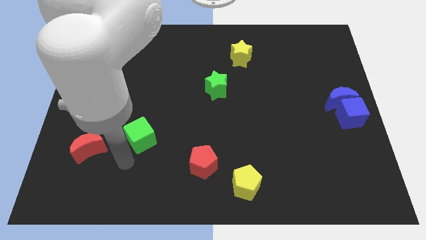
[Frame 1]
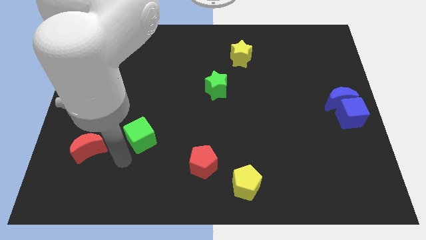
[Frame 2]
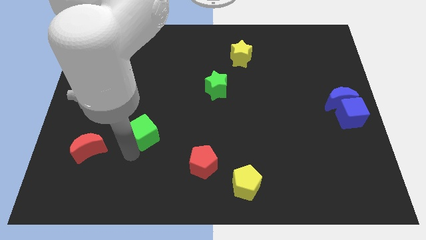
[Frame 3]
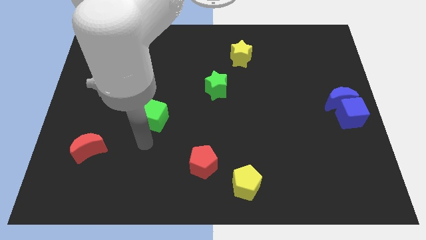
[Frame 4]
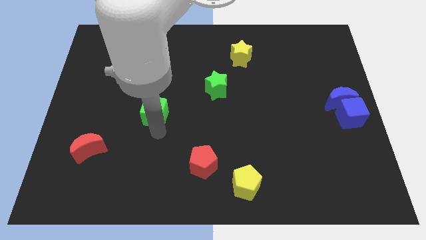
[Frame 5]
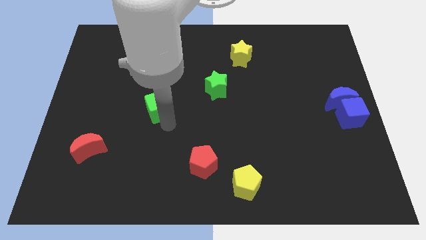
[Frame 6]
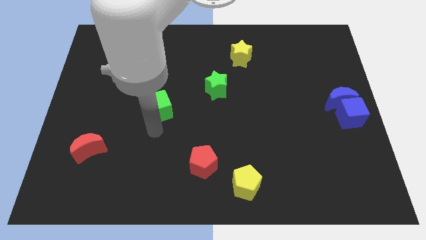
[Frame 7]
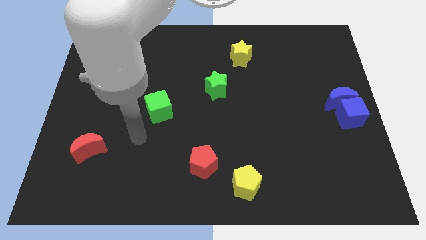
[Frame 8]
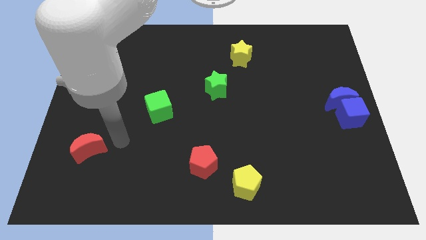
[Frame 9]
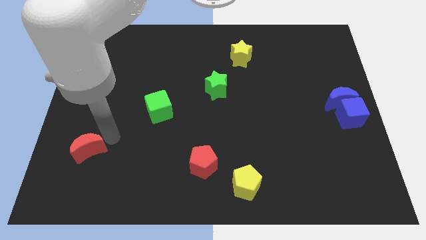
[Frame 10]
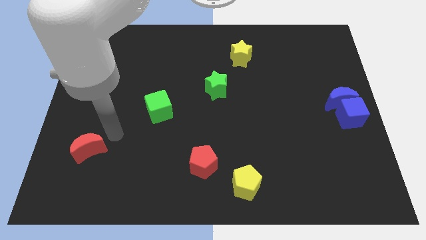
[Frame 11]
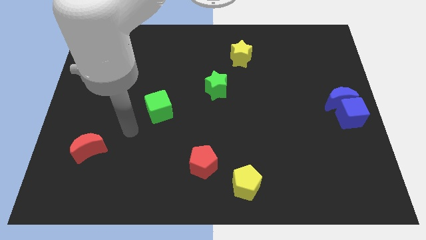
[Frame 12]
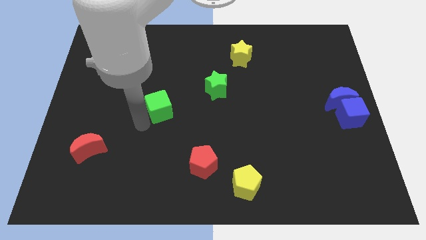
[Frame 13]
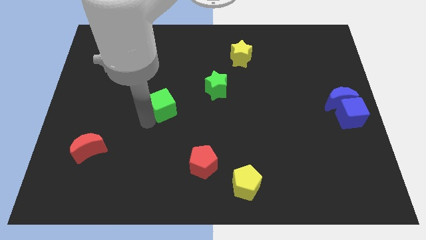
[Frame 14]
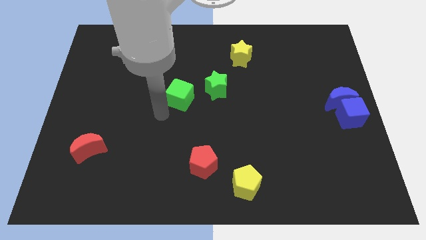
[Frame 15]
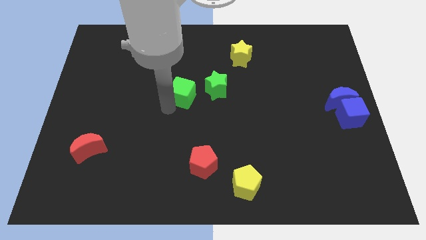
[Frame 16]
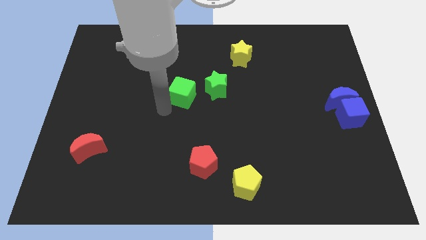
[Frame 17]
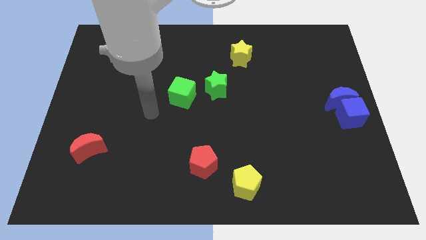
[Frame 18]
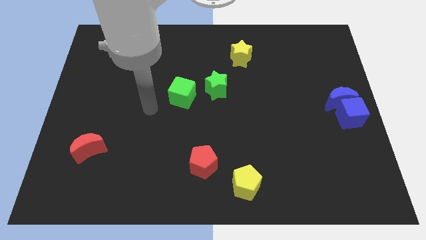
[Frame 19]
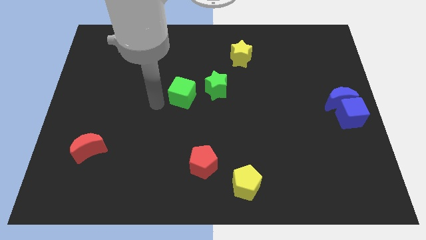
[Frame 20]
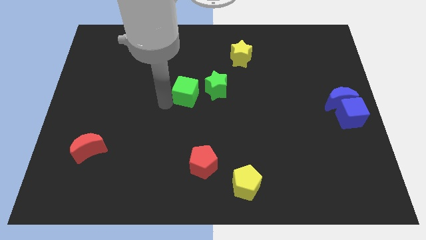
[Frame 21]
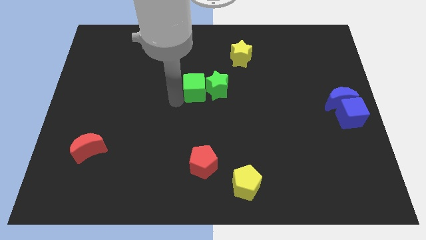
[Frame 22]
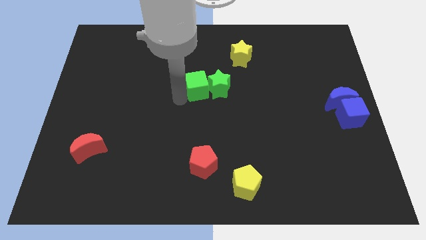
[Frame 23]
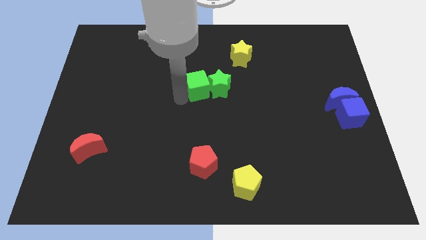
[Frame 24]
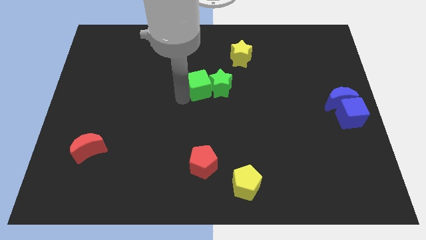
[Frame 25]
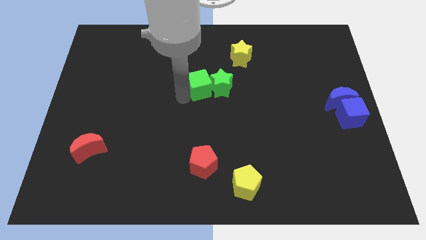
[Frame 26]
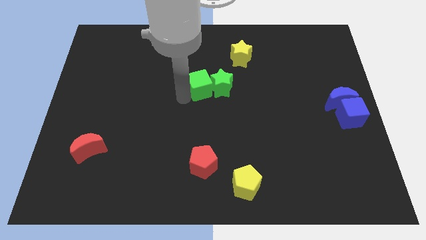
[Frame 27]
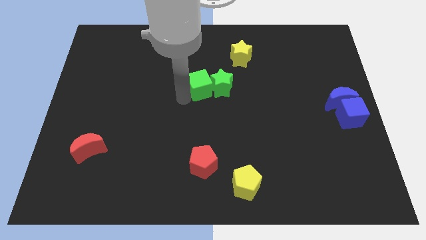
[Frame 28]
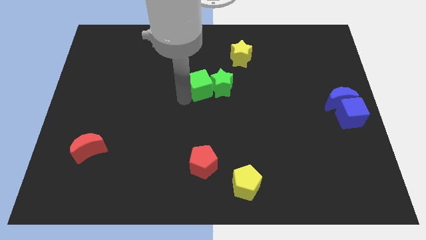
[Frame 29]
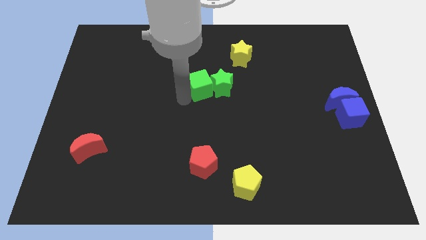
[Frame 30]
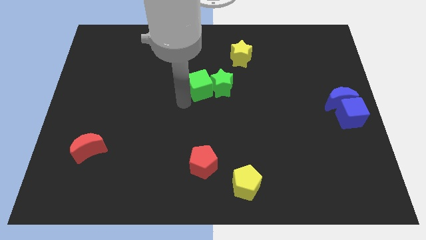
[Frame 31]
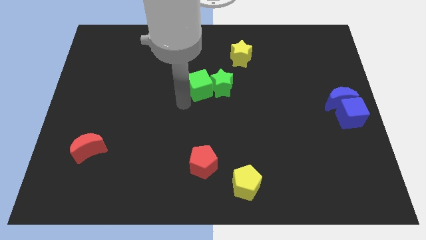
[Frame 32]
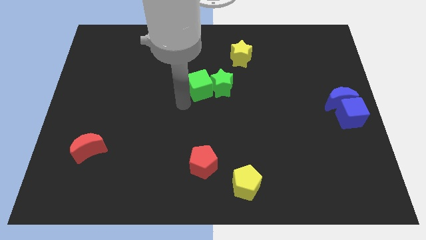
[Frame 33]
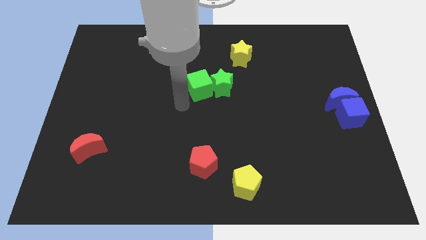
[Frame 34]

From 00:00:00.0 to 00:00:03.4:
slide the green cube into the green star

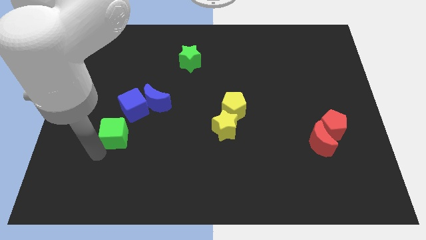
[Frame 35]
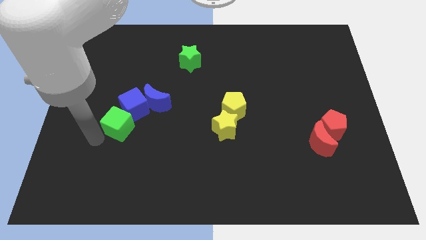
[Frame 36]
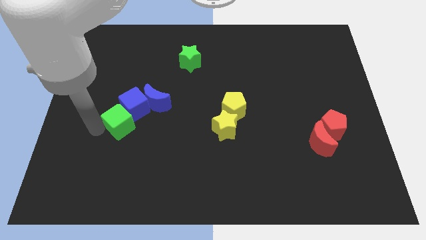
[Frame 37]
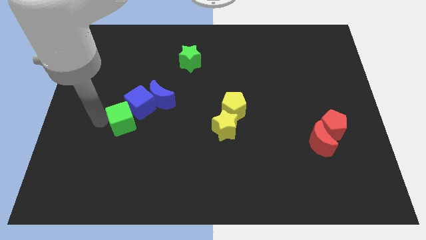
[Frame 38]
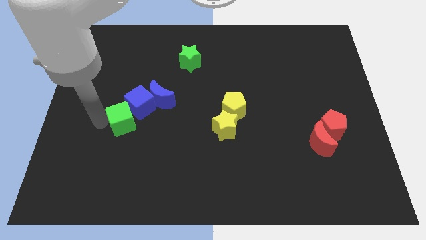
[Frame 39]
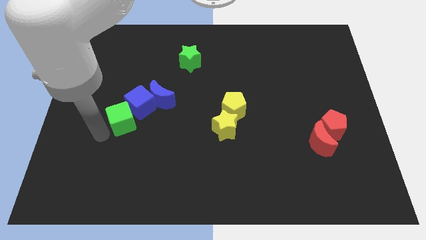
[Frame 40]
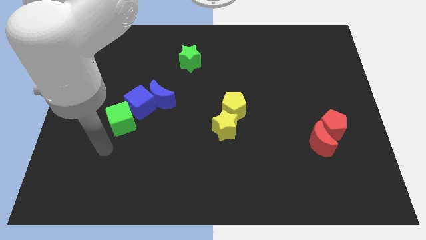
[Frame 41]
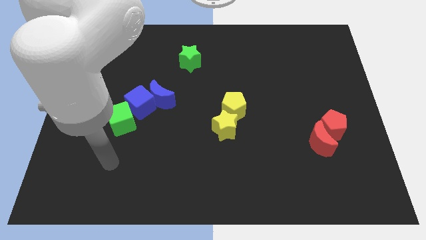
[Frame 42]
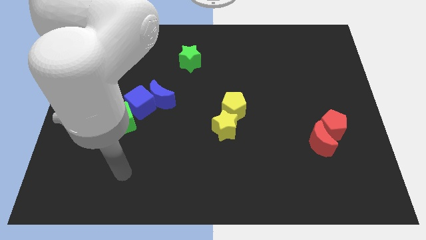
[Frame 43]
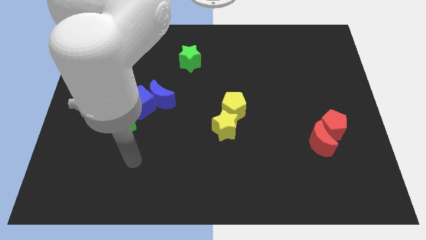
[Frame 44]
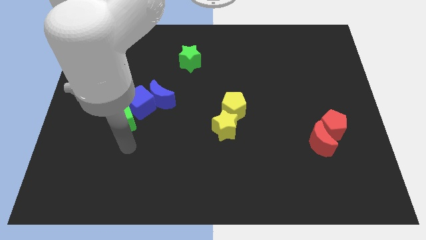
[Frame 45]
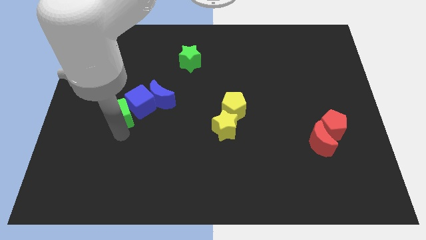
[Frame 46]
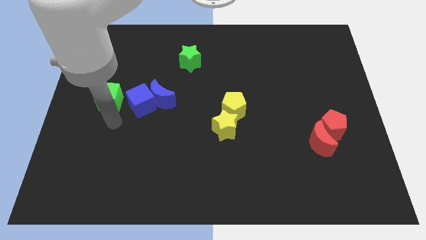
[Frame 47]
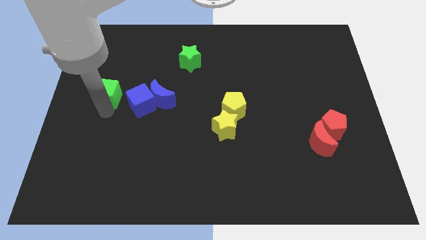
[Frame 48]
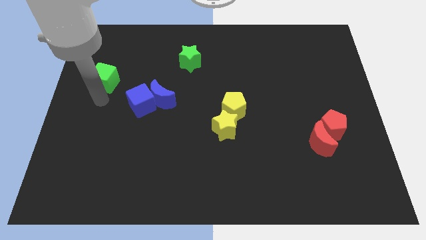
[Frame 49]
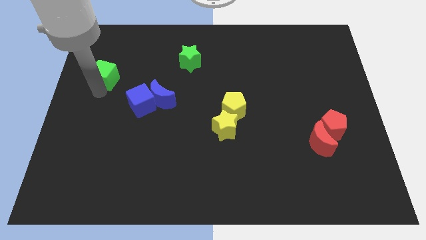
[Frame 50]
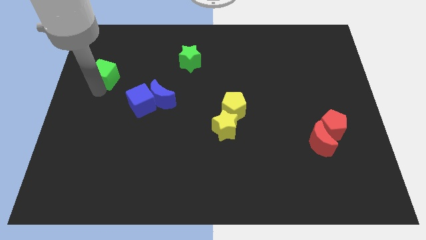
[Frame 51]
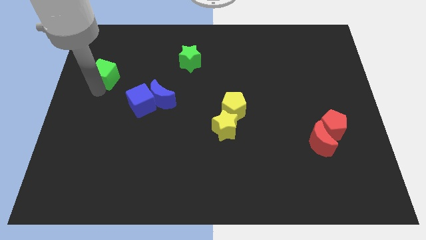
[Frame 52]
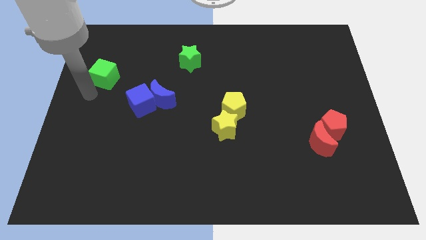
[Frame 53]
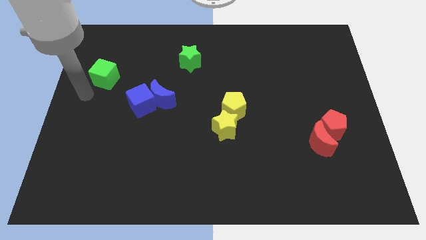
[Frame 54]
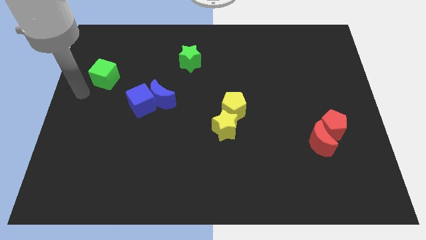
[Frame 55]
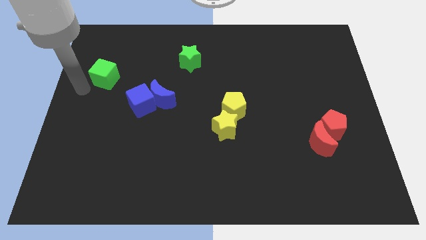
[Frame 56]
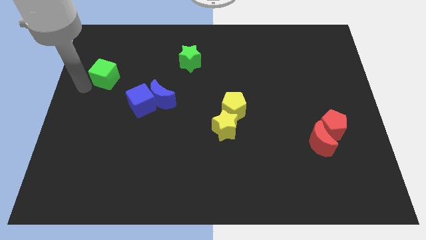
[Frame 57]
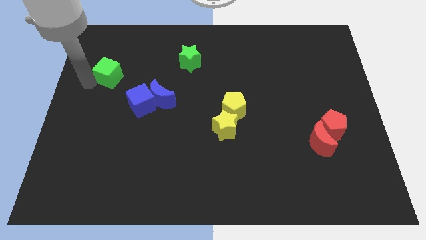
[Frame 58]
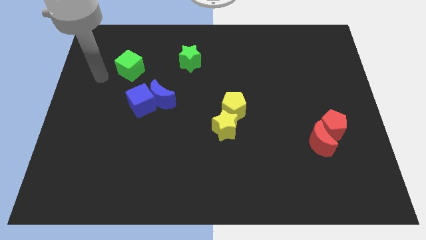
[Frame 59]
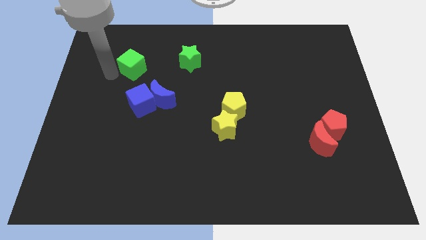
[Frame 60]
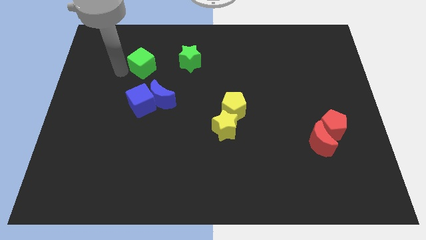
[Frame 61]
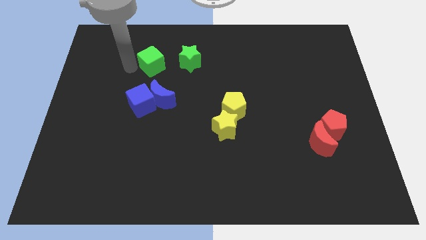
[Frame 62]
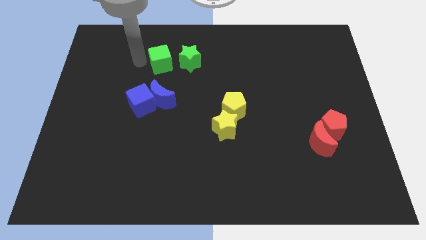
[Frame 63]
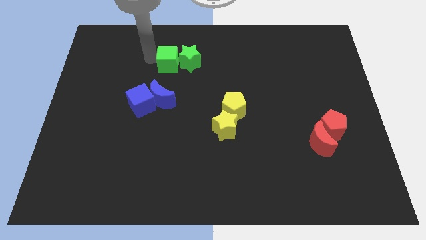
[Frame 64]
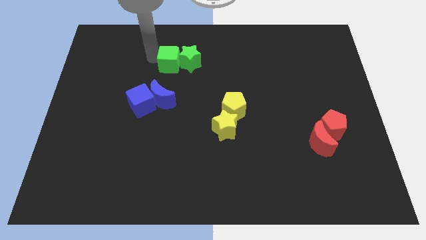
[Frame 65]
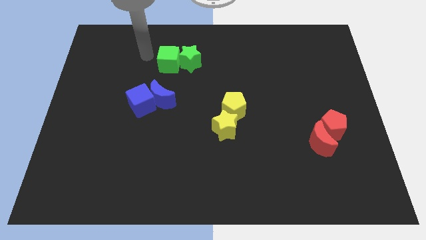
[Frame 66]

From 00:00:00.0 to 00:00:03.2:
place the green cube into the green star

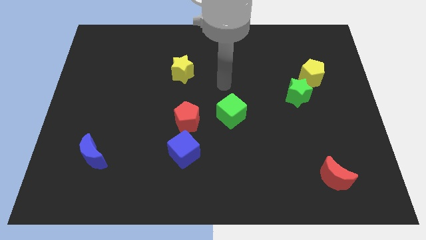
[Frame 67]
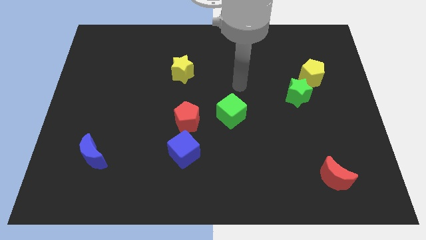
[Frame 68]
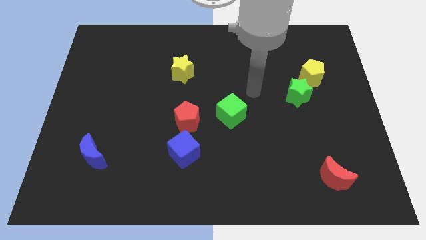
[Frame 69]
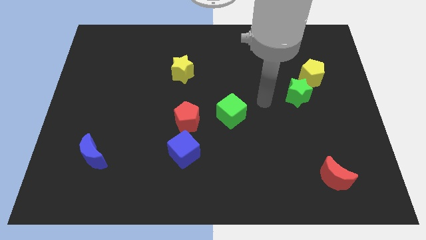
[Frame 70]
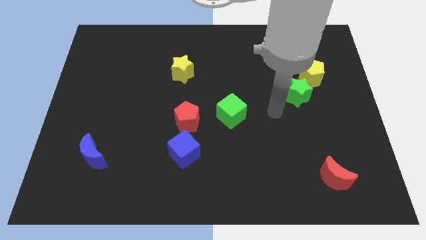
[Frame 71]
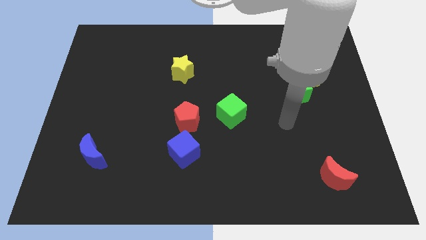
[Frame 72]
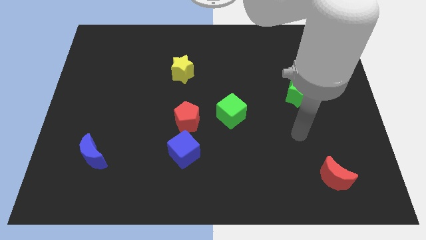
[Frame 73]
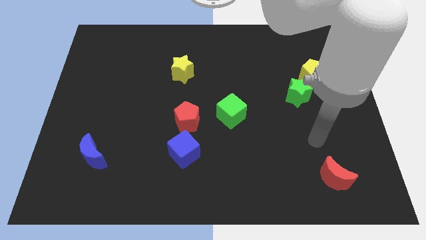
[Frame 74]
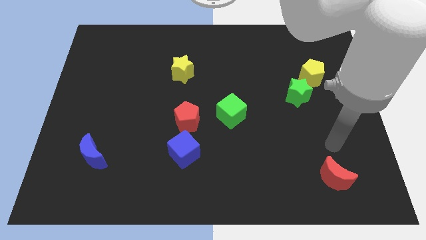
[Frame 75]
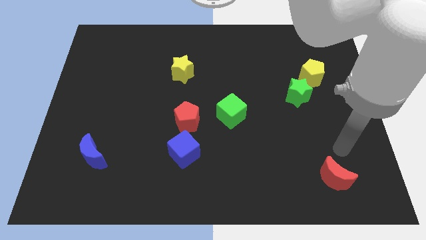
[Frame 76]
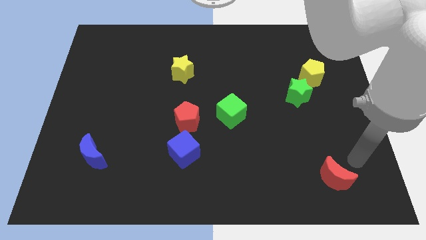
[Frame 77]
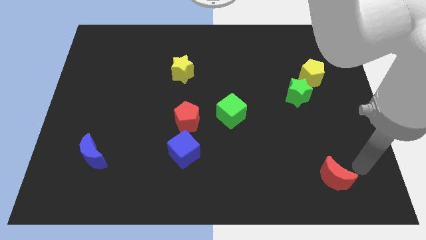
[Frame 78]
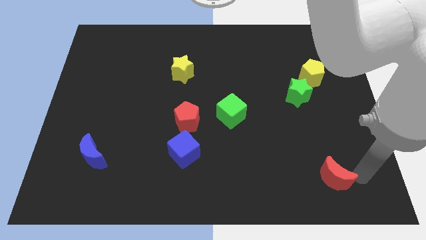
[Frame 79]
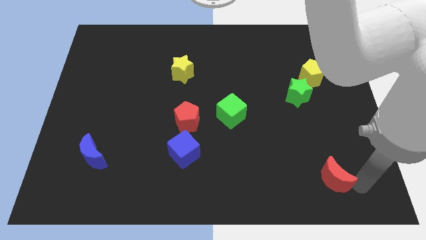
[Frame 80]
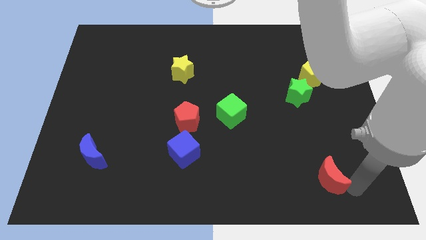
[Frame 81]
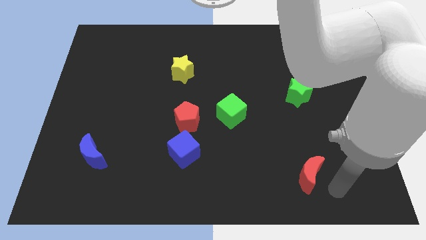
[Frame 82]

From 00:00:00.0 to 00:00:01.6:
slightly push the red crescent

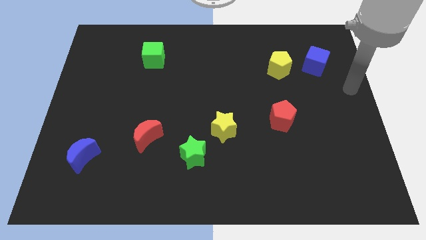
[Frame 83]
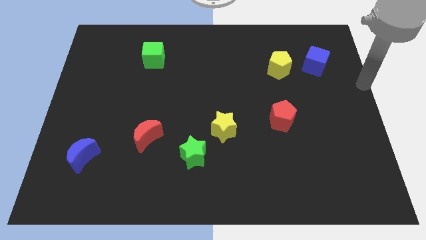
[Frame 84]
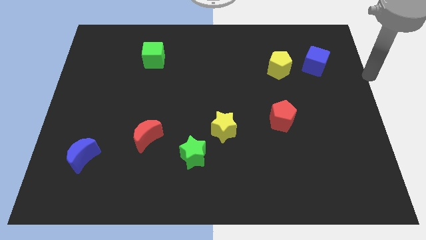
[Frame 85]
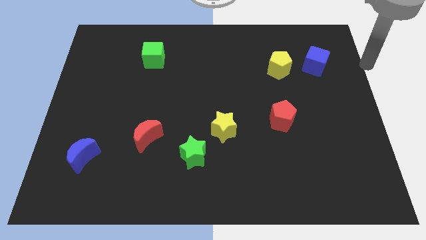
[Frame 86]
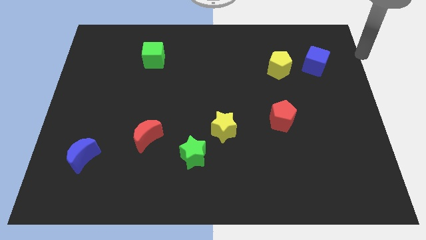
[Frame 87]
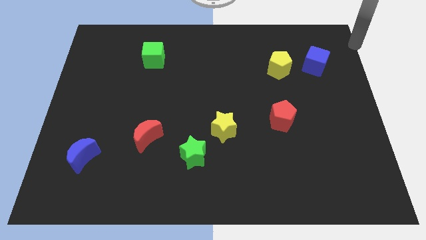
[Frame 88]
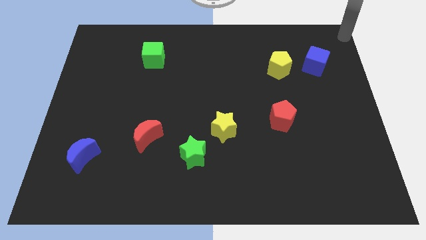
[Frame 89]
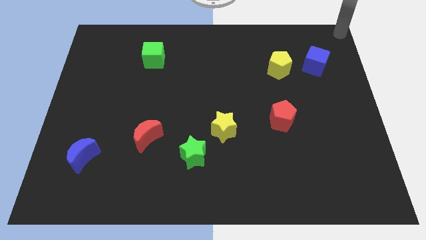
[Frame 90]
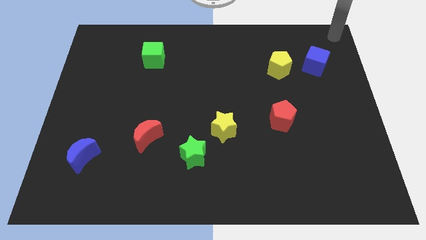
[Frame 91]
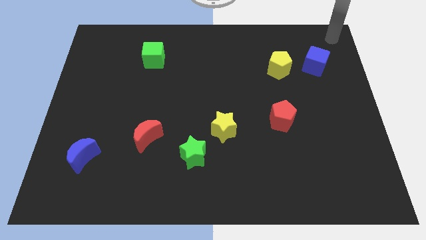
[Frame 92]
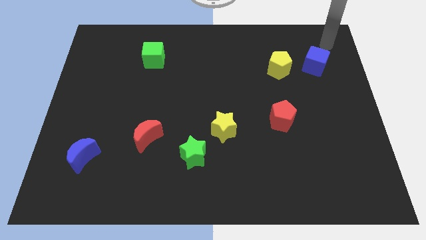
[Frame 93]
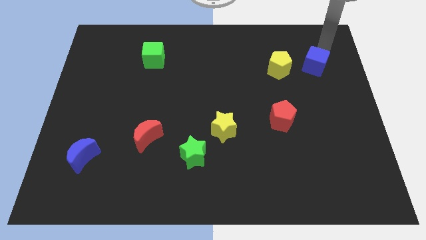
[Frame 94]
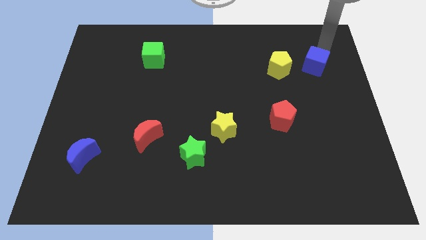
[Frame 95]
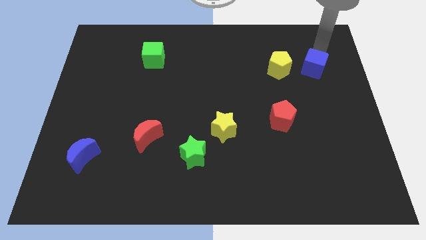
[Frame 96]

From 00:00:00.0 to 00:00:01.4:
push the blue cube towards the red pentagon
